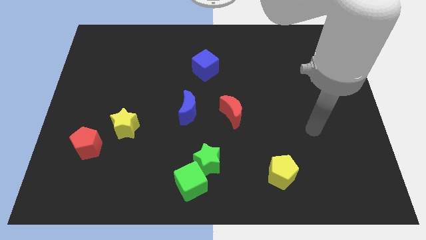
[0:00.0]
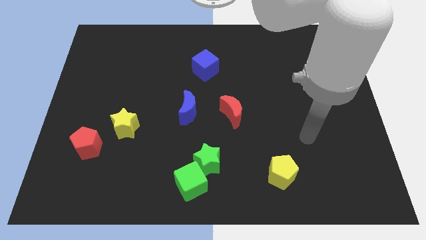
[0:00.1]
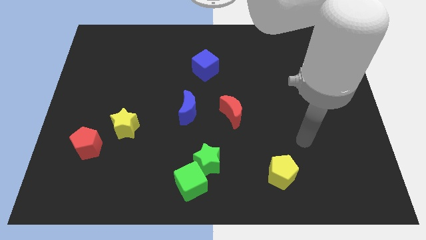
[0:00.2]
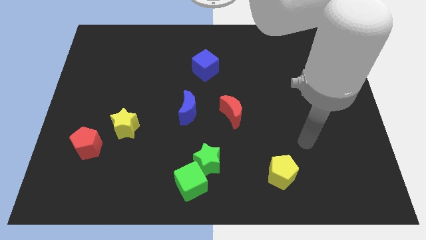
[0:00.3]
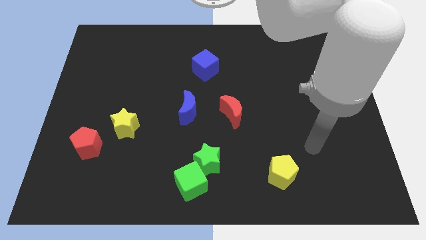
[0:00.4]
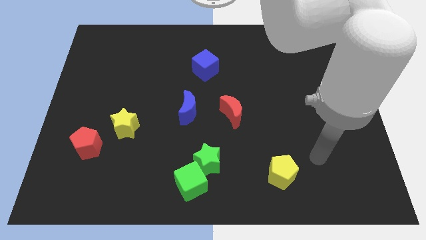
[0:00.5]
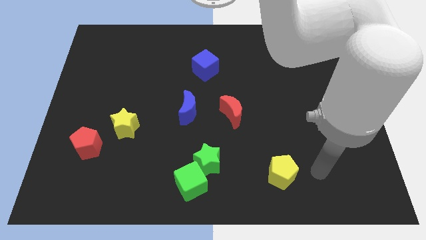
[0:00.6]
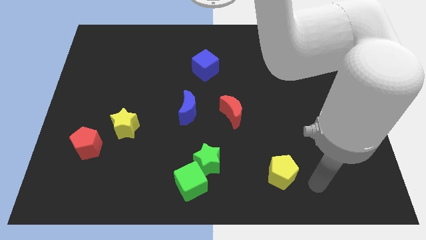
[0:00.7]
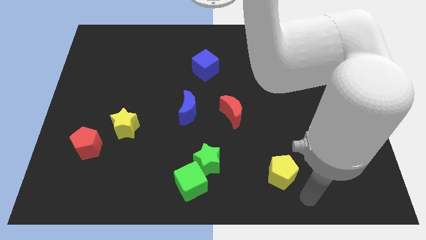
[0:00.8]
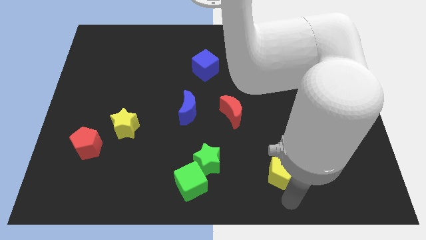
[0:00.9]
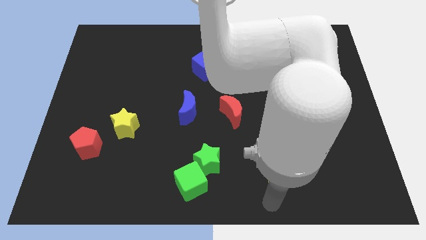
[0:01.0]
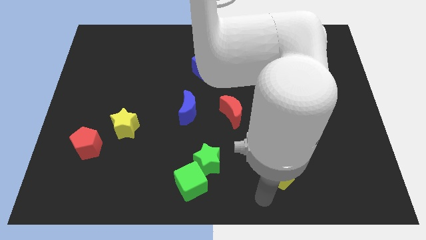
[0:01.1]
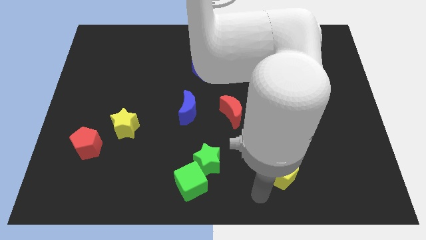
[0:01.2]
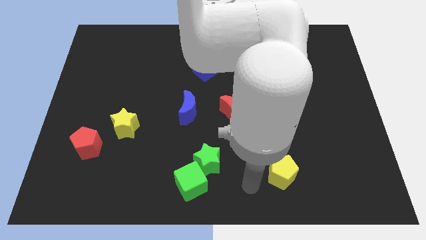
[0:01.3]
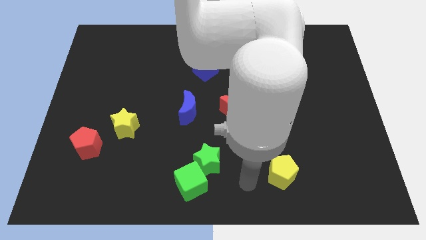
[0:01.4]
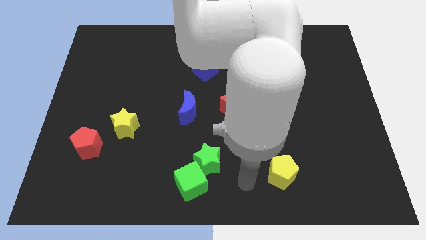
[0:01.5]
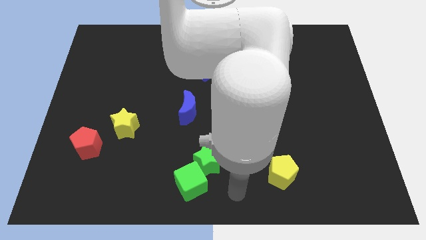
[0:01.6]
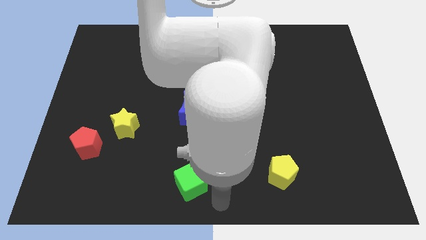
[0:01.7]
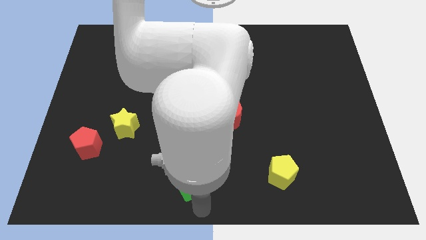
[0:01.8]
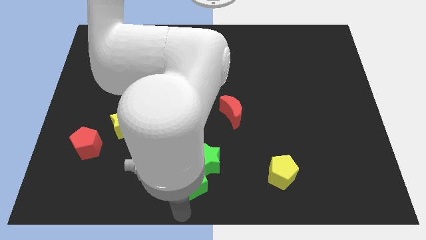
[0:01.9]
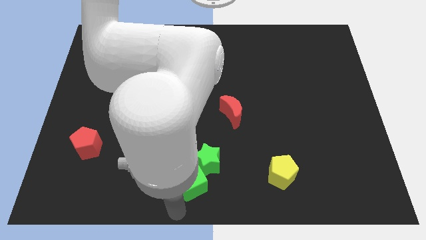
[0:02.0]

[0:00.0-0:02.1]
move your arm towards the bottom of the green cube

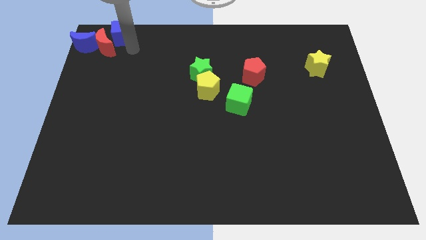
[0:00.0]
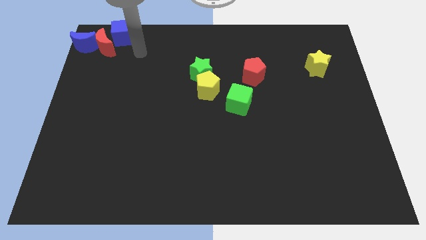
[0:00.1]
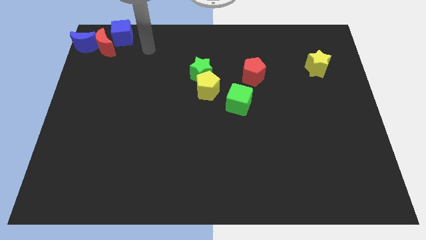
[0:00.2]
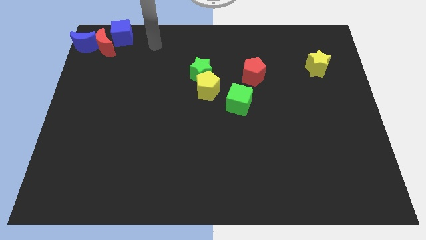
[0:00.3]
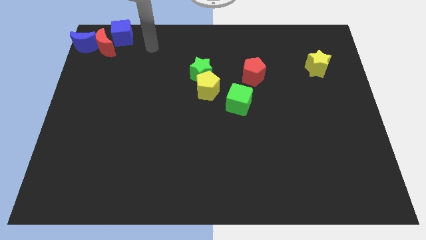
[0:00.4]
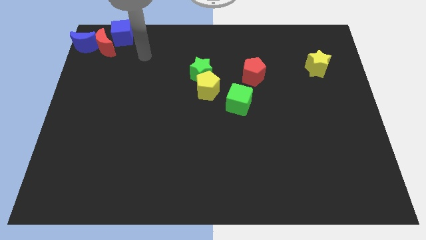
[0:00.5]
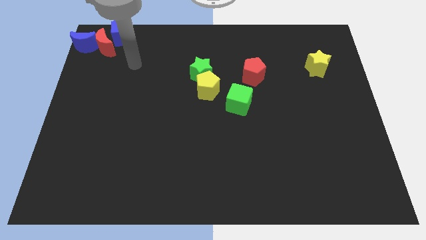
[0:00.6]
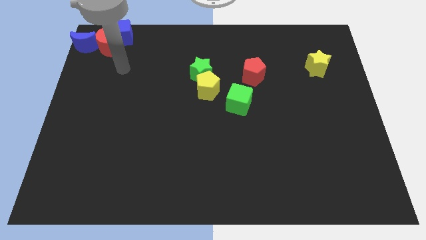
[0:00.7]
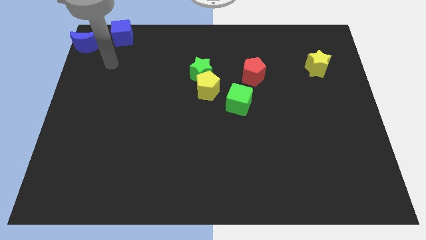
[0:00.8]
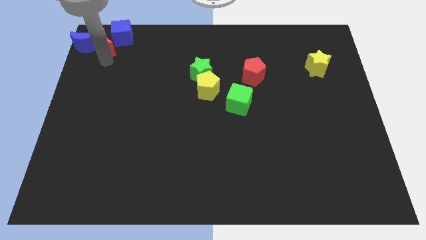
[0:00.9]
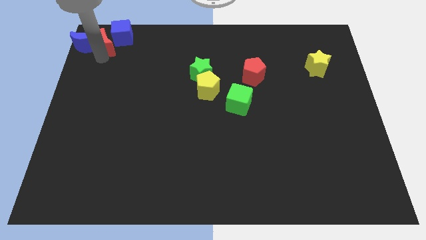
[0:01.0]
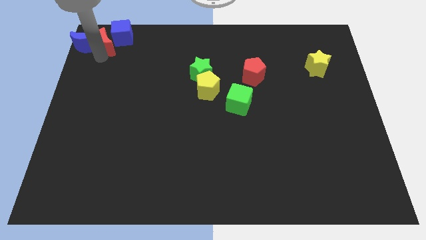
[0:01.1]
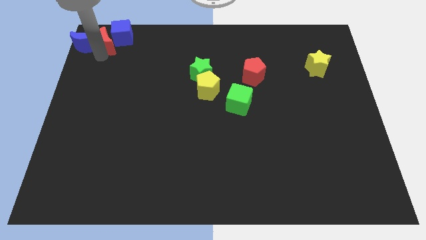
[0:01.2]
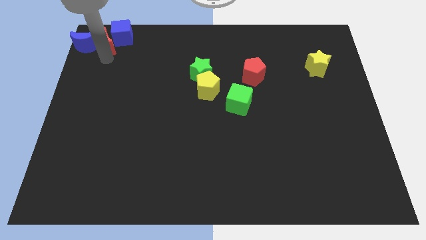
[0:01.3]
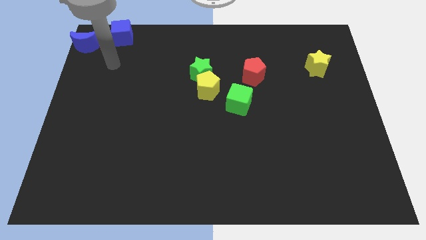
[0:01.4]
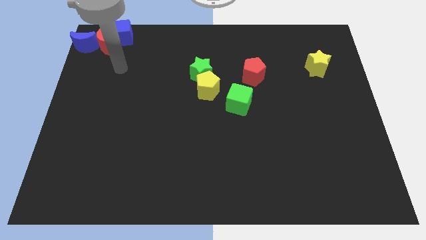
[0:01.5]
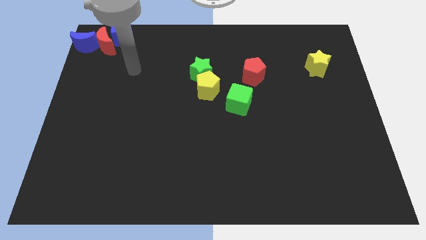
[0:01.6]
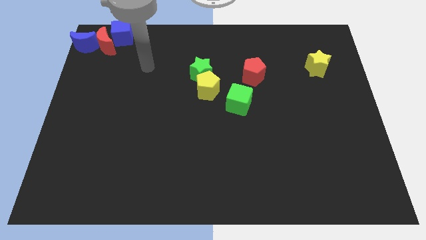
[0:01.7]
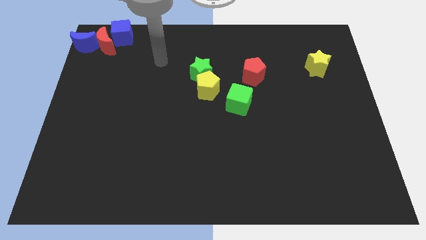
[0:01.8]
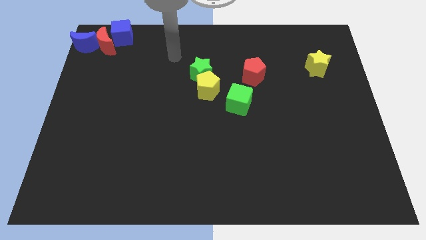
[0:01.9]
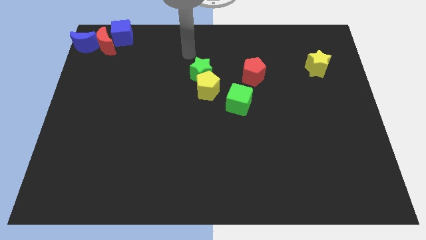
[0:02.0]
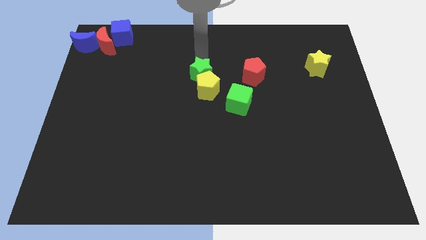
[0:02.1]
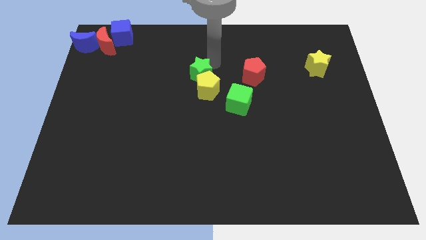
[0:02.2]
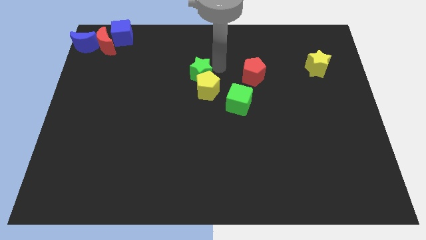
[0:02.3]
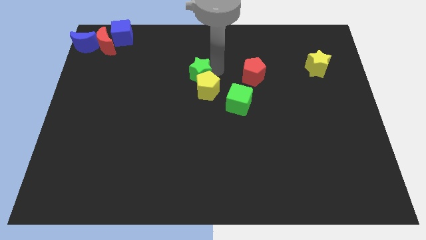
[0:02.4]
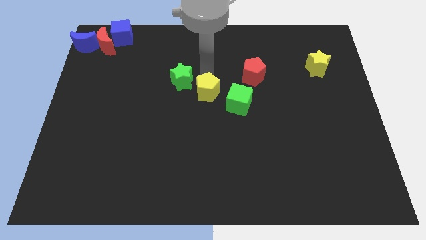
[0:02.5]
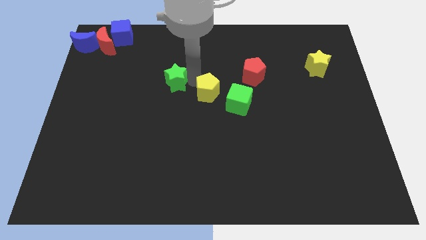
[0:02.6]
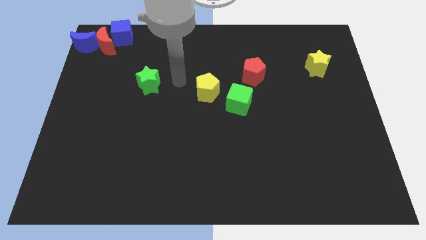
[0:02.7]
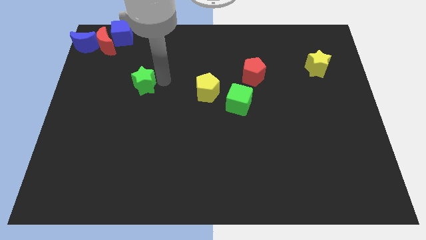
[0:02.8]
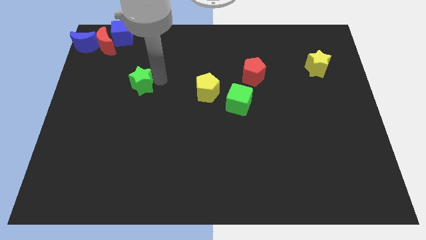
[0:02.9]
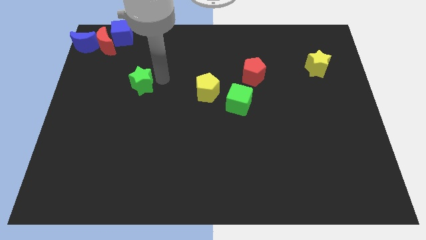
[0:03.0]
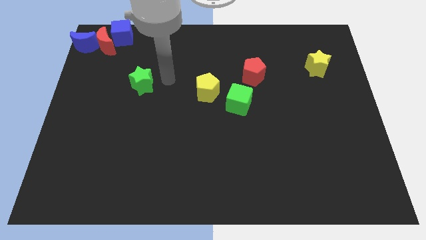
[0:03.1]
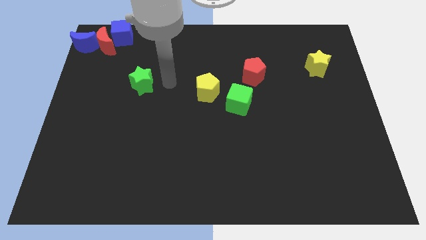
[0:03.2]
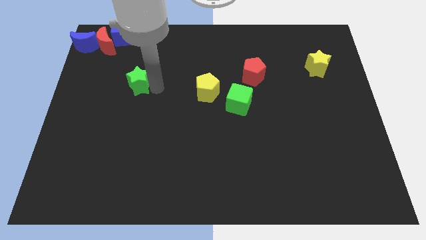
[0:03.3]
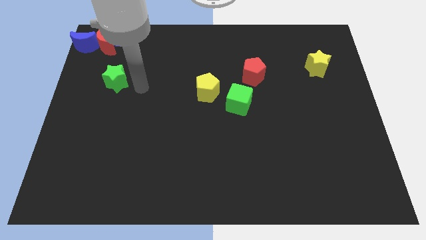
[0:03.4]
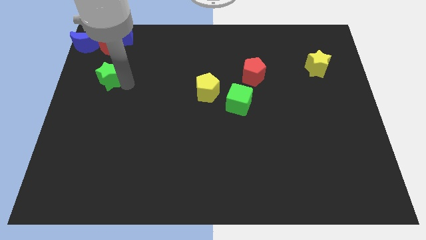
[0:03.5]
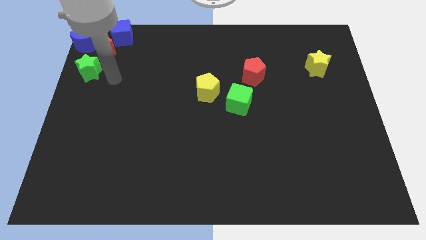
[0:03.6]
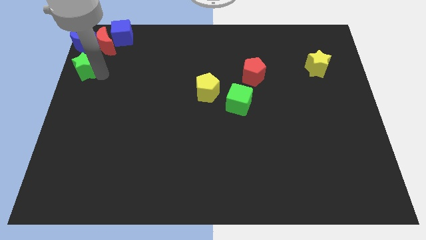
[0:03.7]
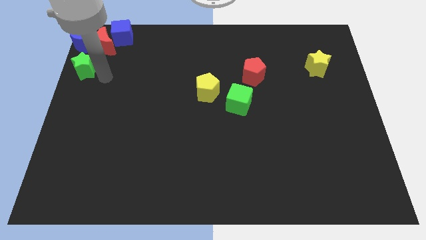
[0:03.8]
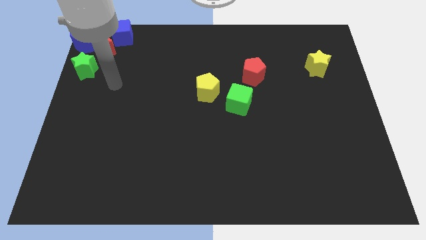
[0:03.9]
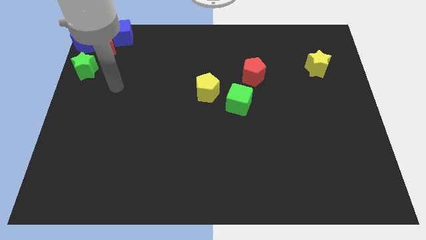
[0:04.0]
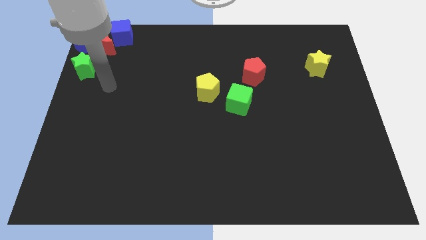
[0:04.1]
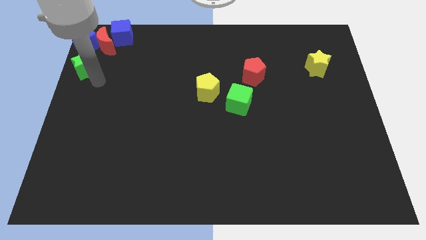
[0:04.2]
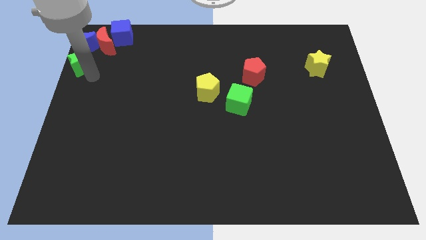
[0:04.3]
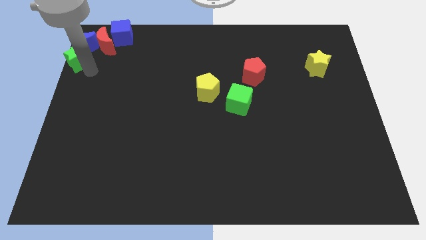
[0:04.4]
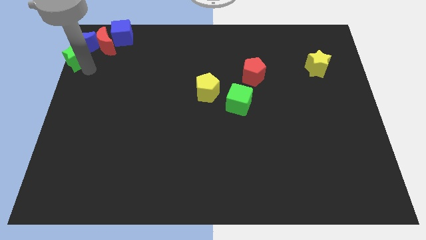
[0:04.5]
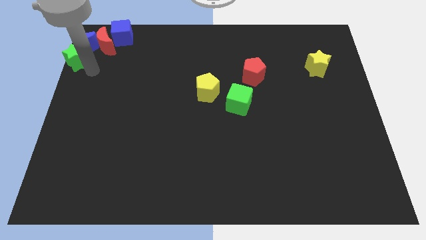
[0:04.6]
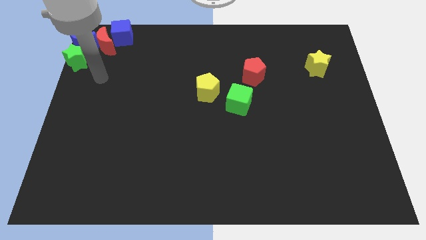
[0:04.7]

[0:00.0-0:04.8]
place the green star to the bottom of blue moon

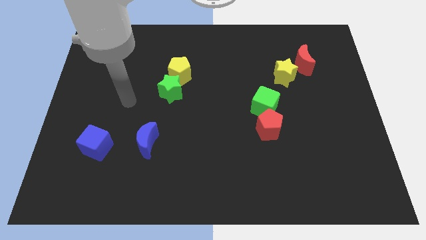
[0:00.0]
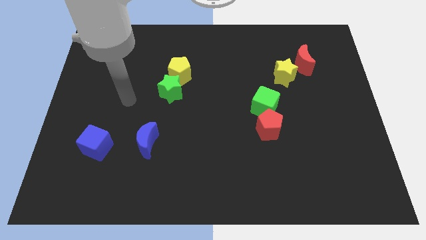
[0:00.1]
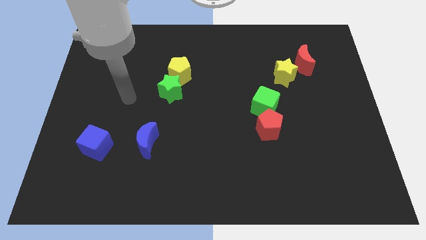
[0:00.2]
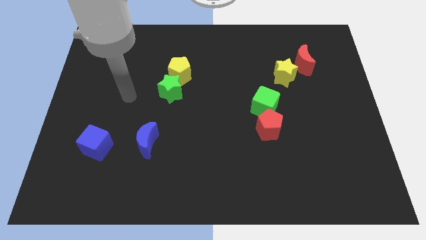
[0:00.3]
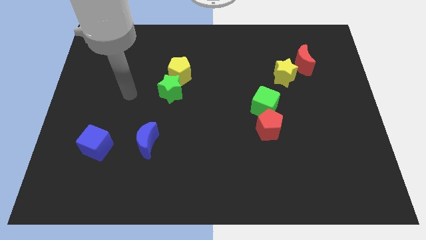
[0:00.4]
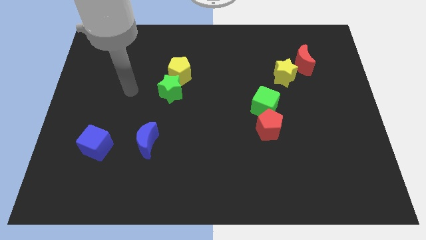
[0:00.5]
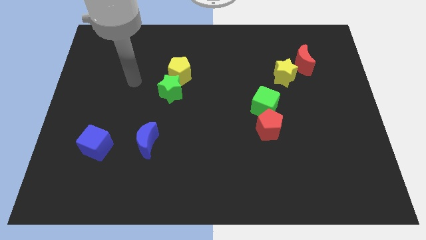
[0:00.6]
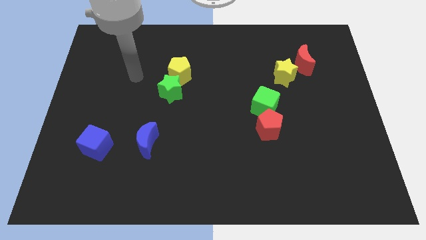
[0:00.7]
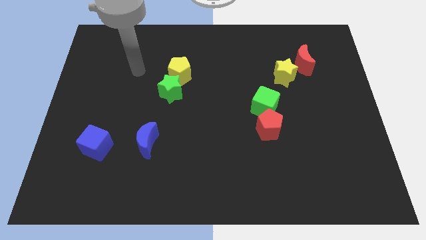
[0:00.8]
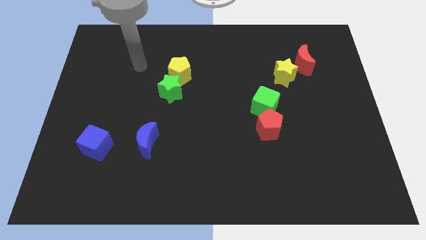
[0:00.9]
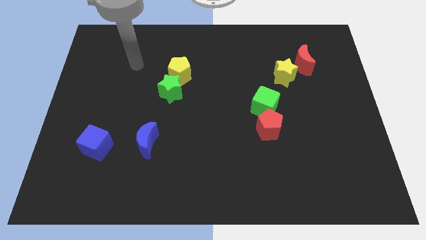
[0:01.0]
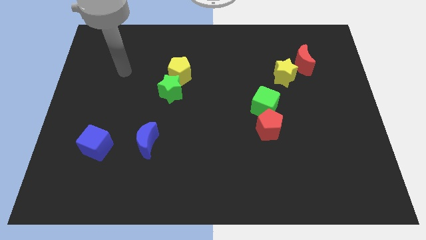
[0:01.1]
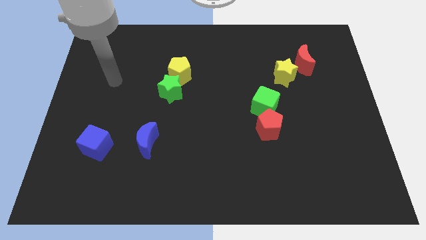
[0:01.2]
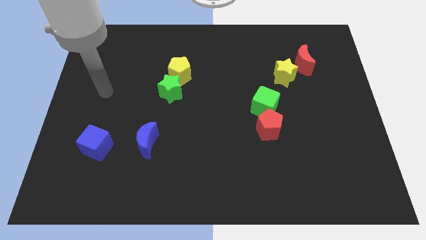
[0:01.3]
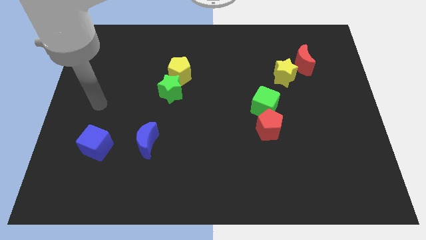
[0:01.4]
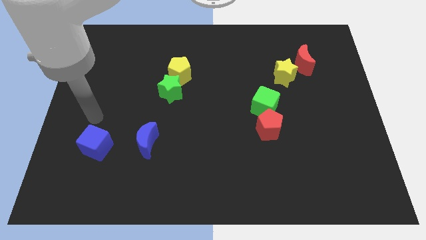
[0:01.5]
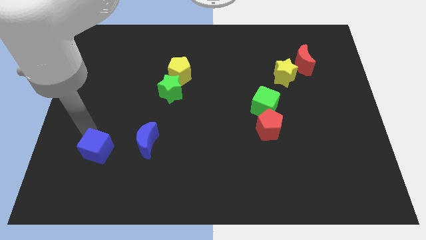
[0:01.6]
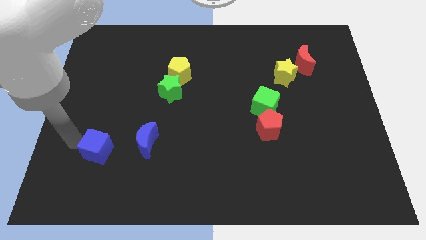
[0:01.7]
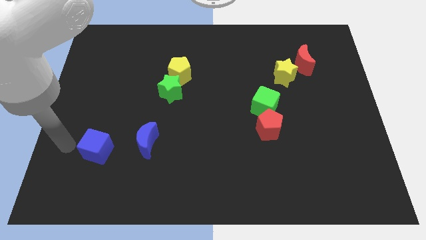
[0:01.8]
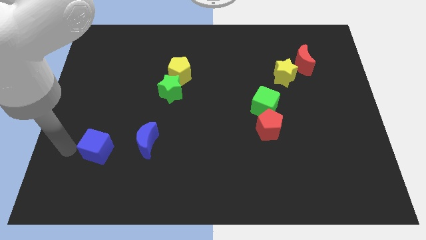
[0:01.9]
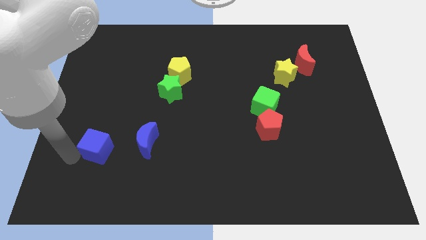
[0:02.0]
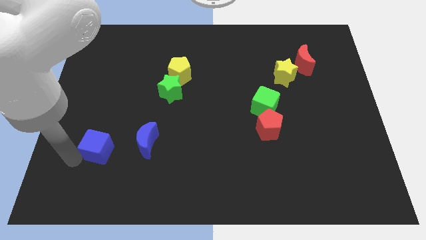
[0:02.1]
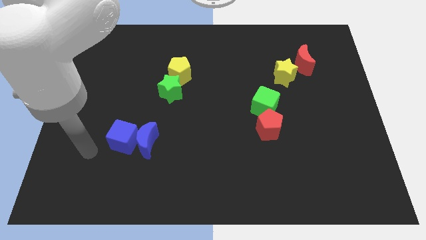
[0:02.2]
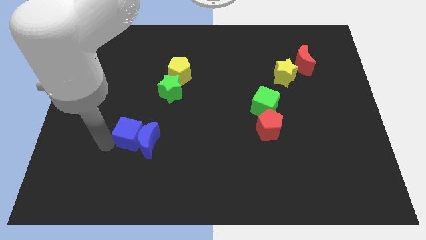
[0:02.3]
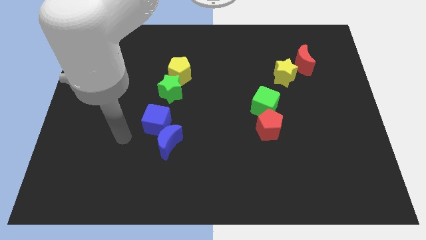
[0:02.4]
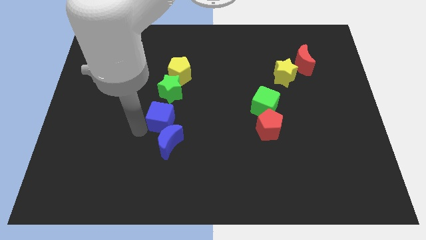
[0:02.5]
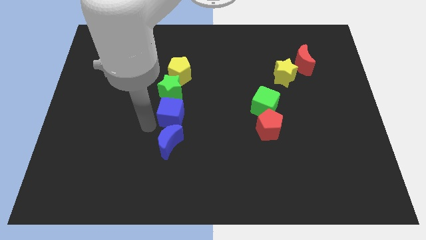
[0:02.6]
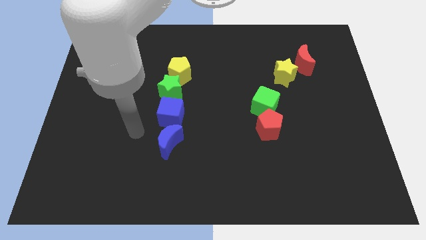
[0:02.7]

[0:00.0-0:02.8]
place the blue square in between green star and blue crescent
